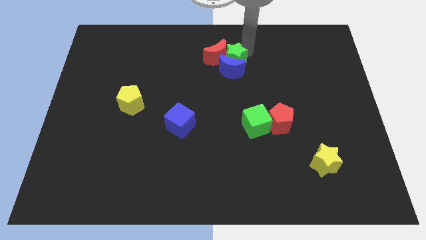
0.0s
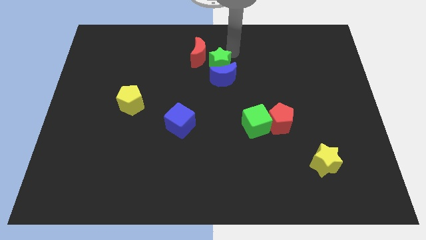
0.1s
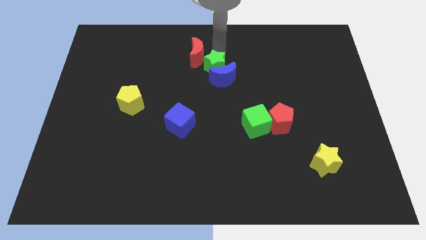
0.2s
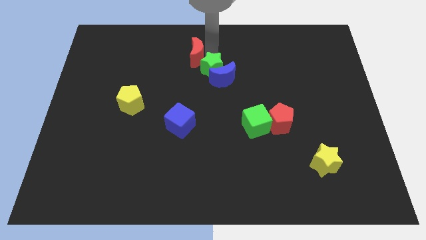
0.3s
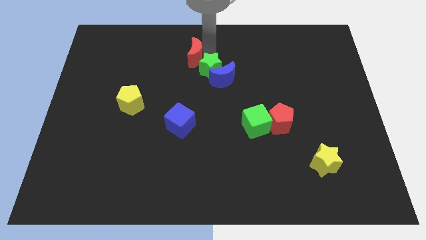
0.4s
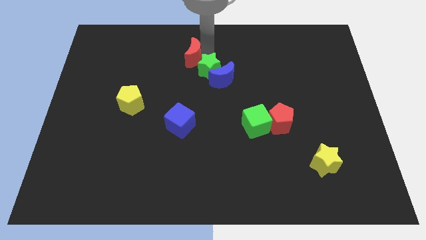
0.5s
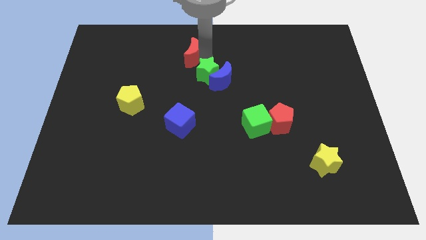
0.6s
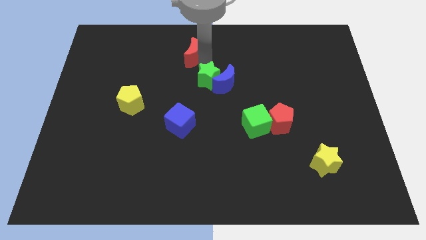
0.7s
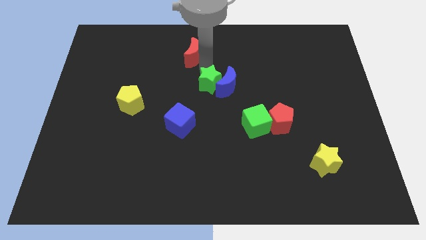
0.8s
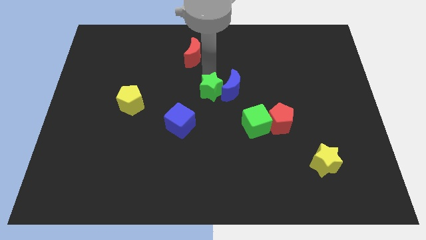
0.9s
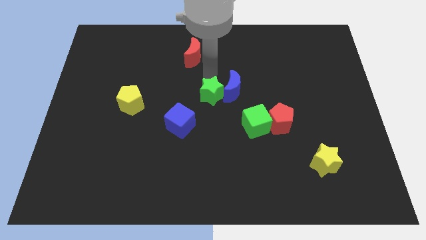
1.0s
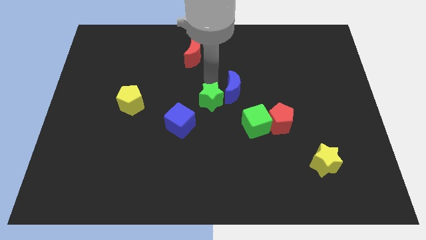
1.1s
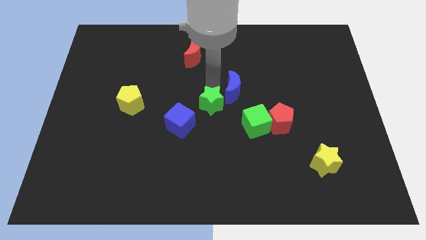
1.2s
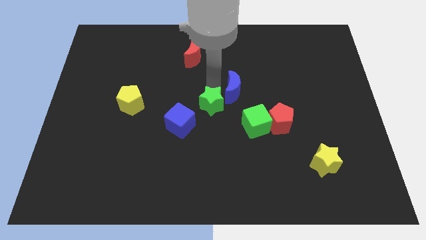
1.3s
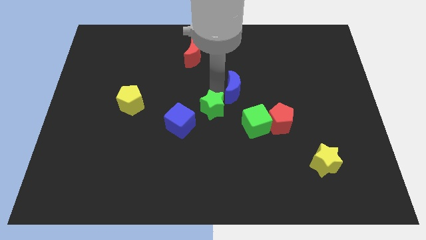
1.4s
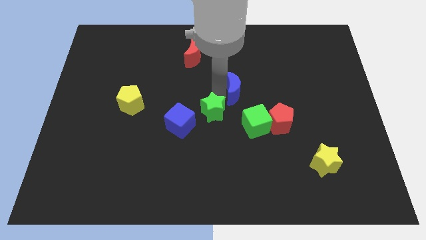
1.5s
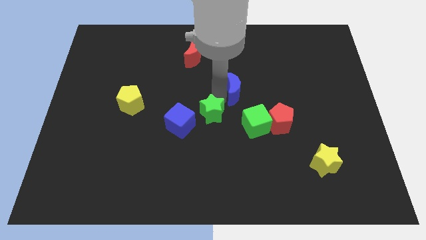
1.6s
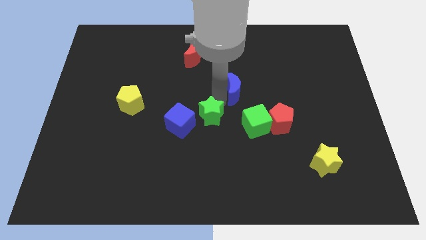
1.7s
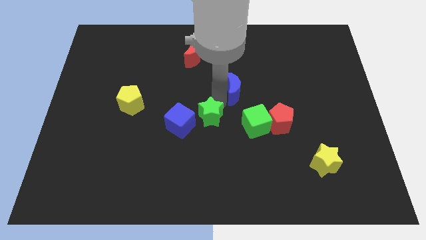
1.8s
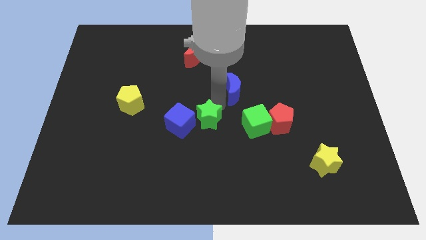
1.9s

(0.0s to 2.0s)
separate the green star with the blue crescent and the red crescent

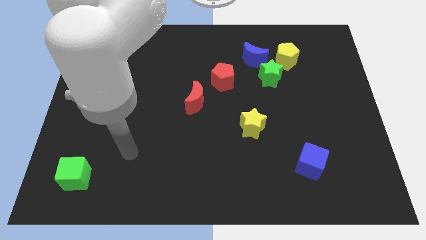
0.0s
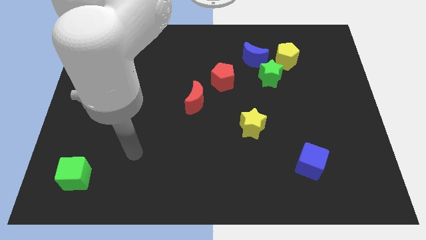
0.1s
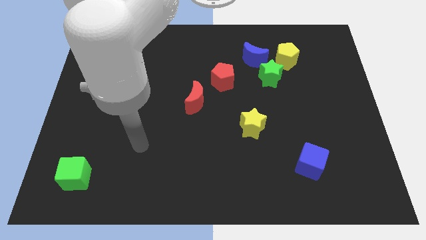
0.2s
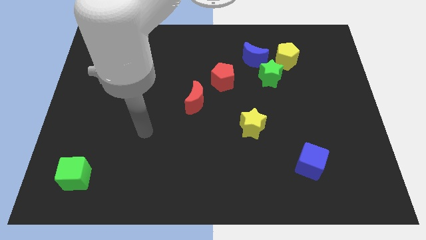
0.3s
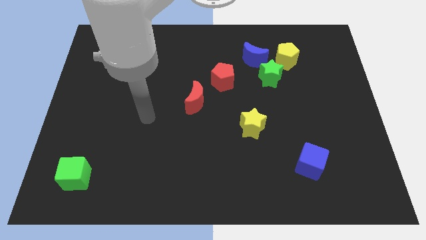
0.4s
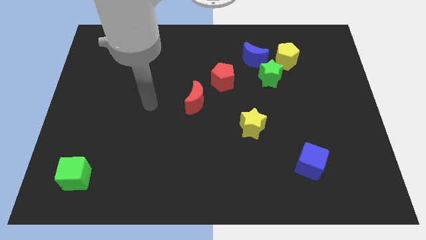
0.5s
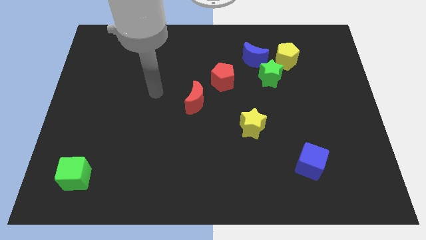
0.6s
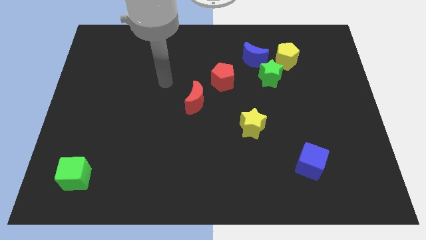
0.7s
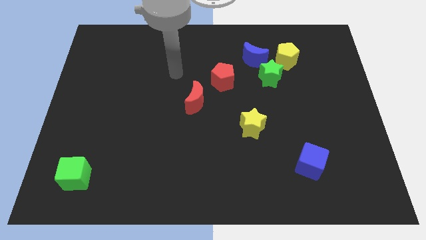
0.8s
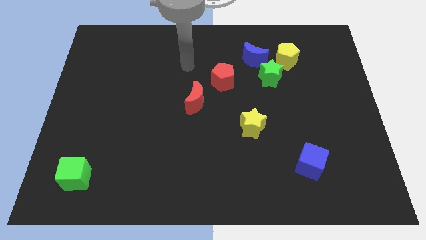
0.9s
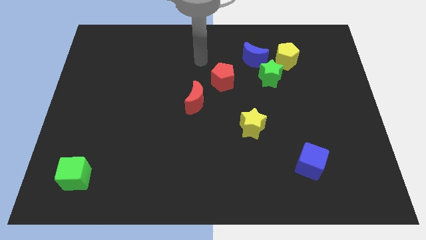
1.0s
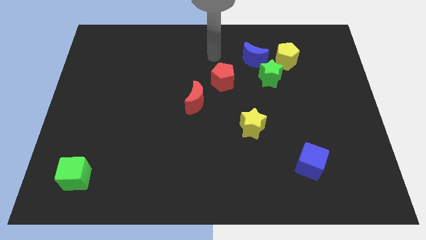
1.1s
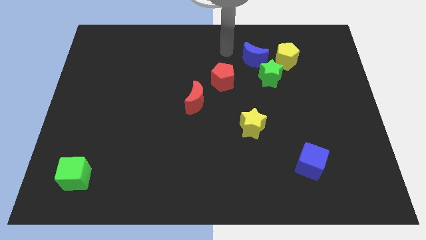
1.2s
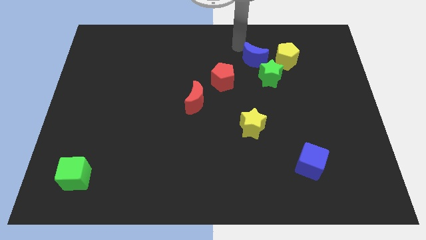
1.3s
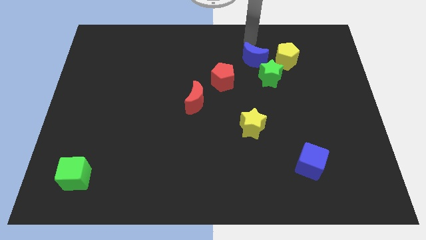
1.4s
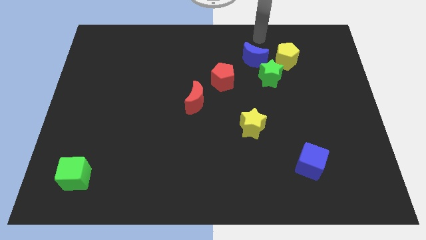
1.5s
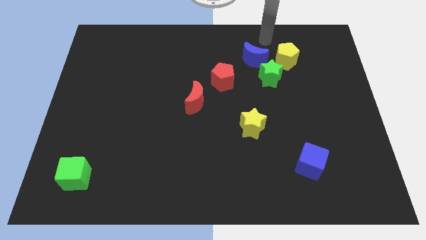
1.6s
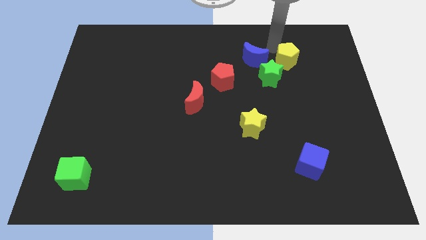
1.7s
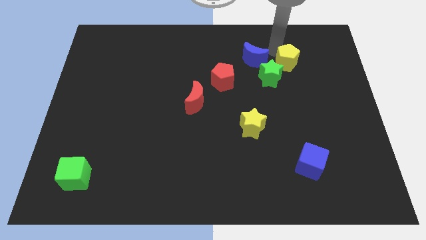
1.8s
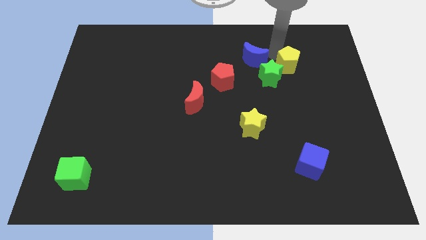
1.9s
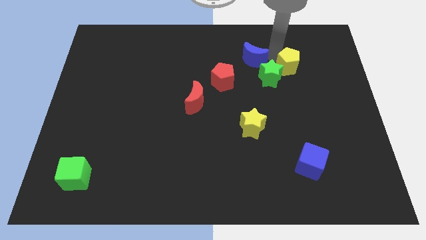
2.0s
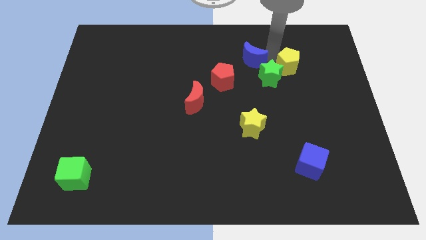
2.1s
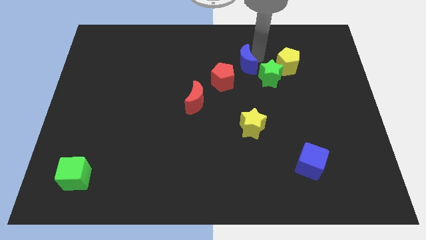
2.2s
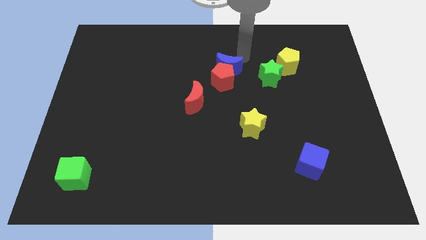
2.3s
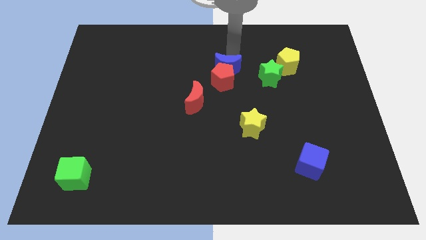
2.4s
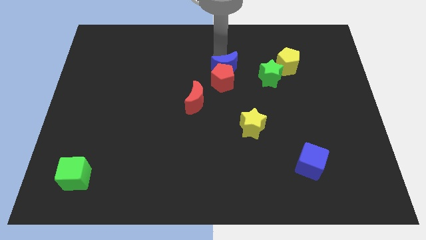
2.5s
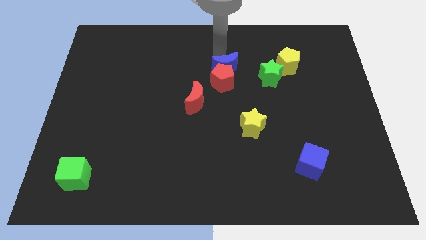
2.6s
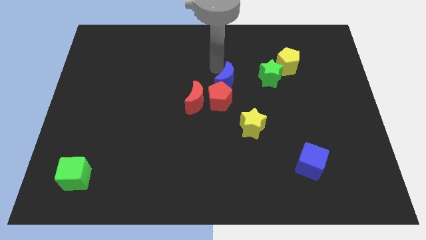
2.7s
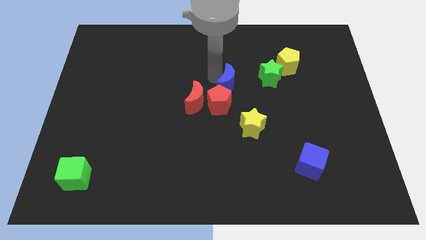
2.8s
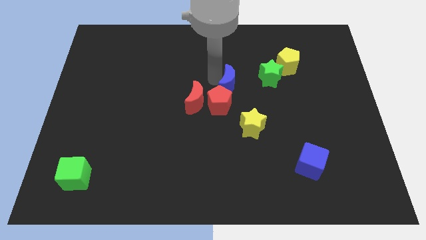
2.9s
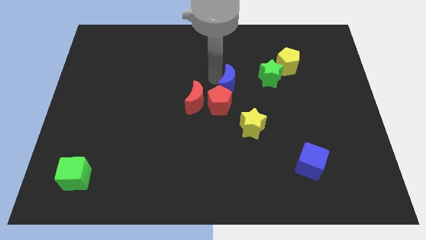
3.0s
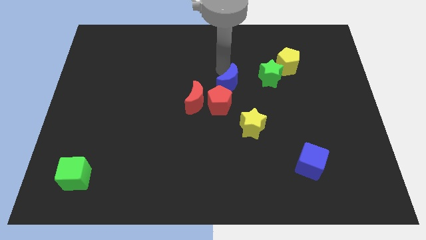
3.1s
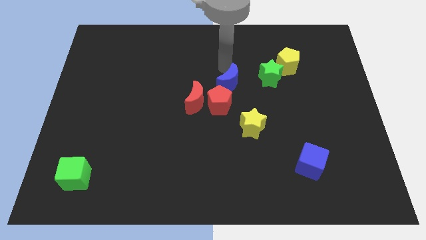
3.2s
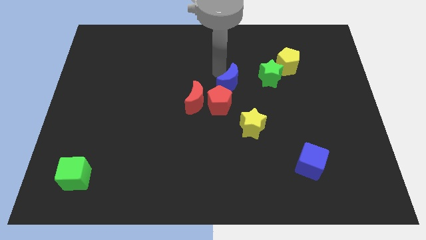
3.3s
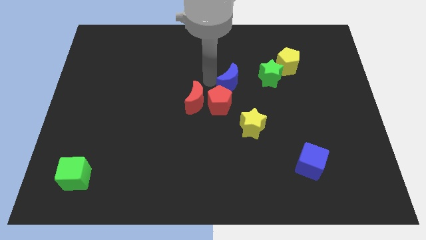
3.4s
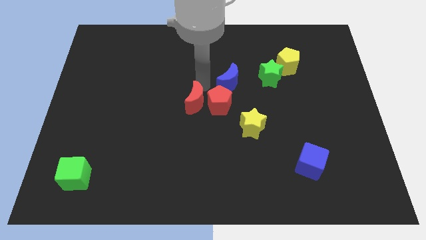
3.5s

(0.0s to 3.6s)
push the red pentagon towards the center using the blue crescent

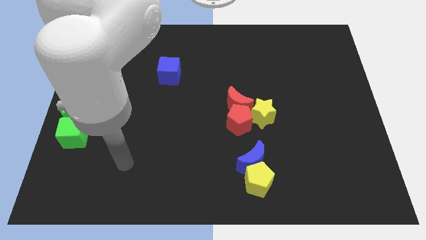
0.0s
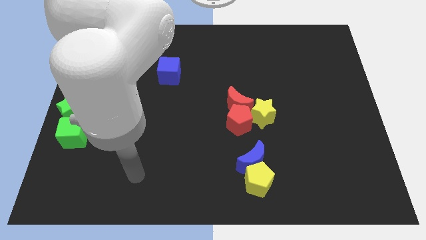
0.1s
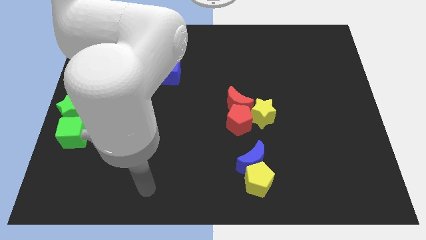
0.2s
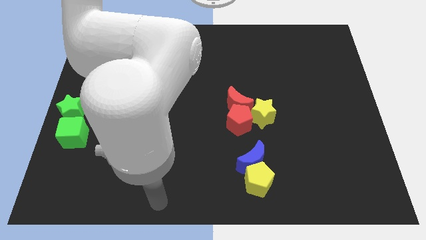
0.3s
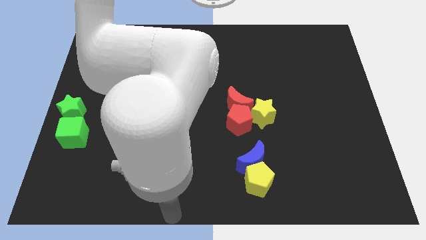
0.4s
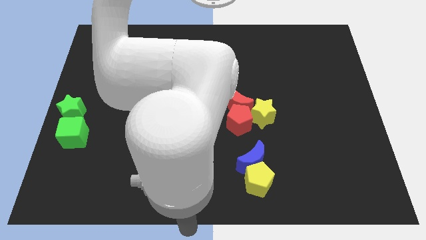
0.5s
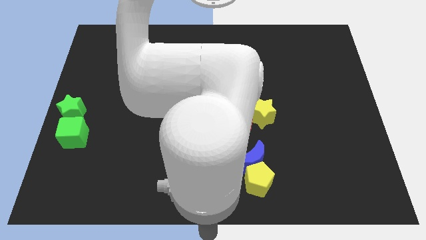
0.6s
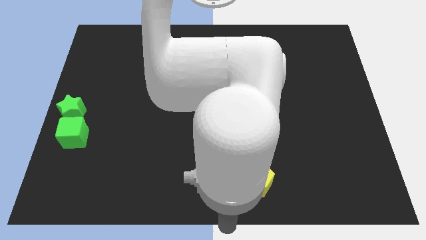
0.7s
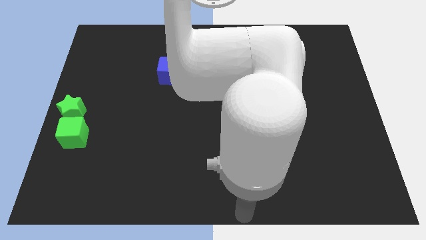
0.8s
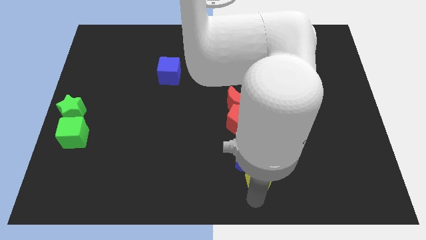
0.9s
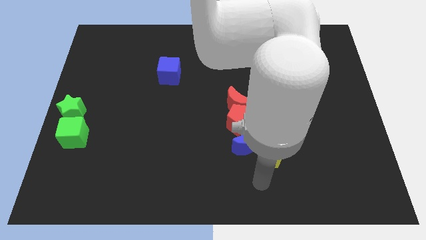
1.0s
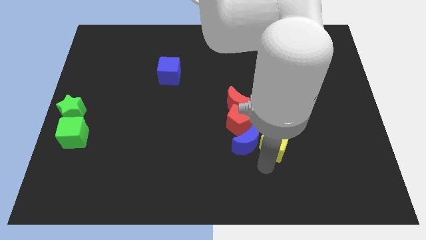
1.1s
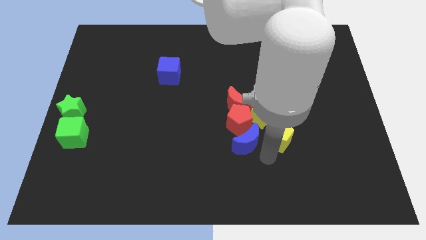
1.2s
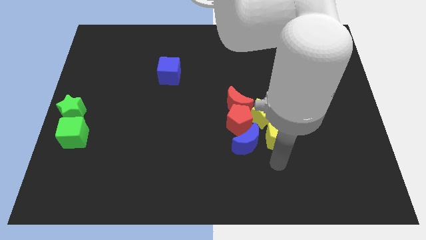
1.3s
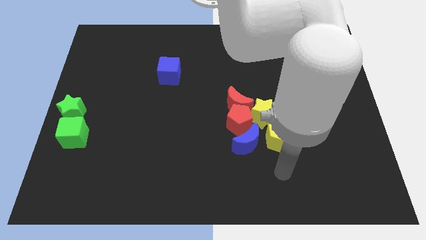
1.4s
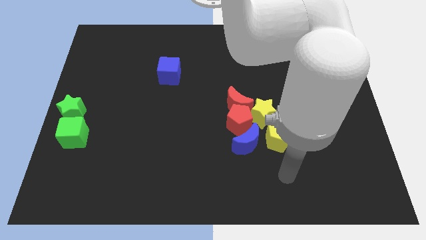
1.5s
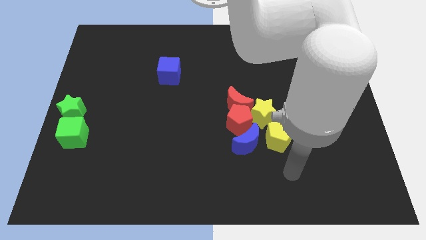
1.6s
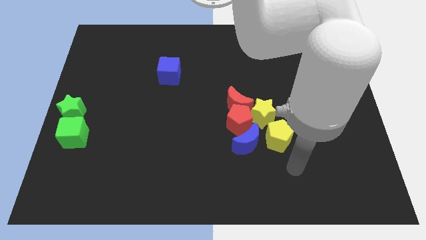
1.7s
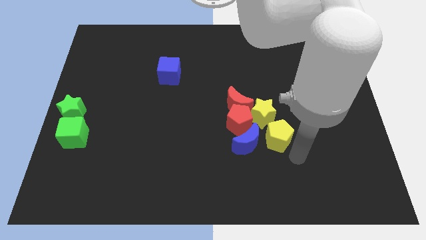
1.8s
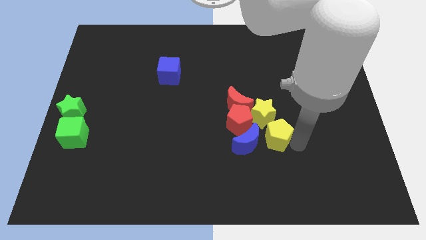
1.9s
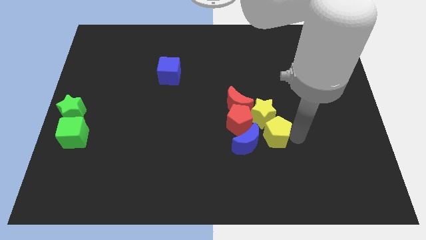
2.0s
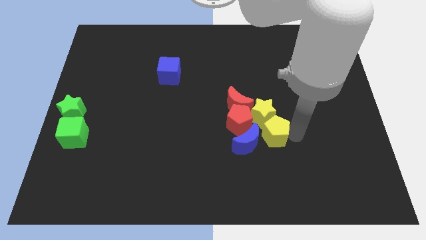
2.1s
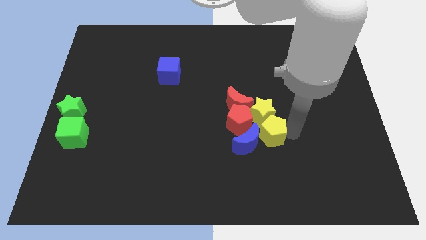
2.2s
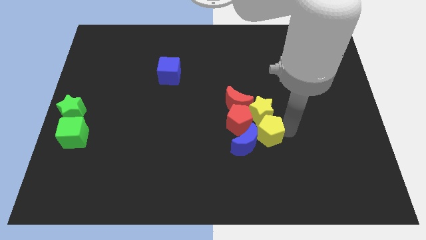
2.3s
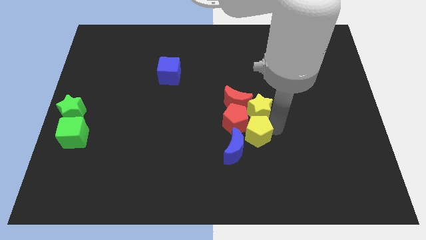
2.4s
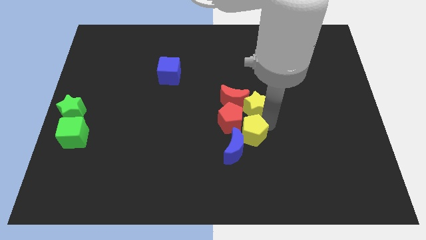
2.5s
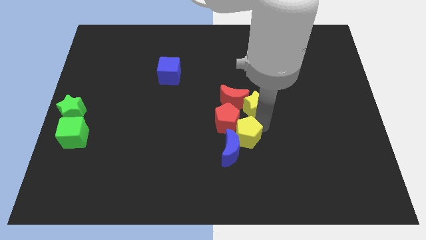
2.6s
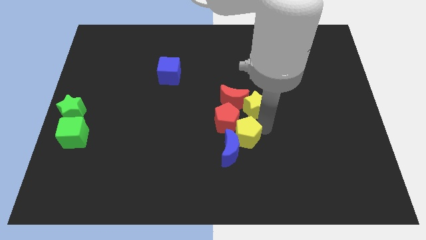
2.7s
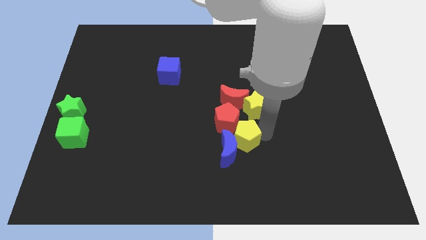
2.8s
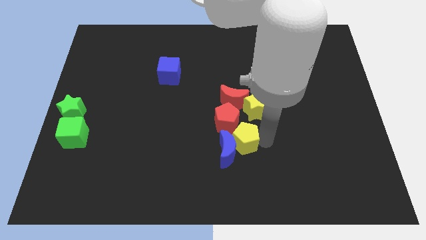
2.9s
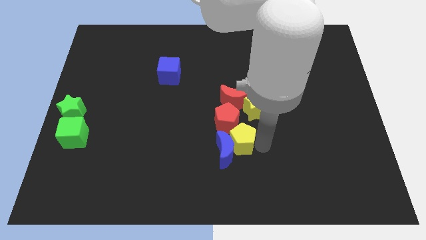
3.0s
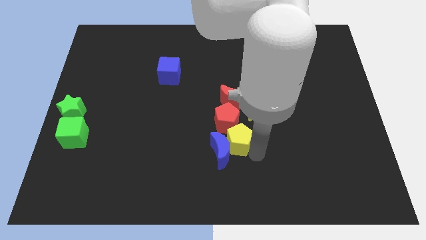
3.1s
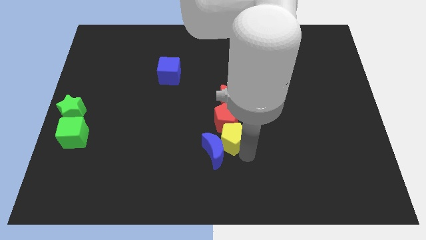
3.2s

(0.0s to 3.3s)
push the yellow pentagon into the group of blocks

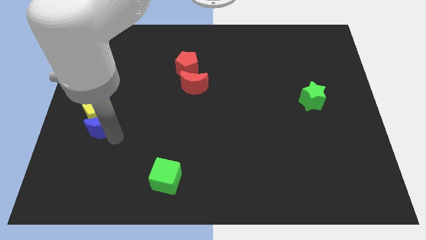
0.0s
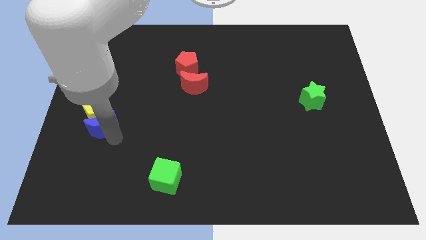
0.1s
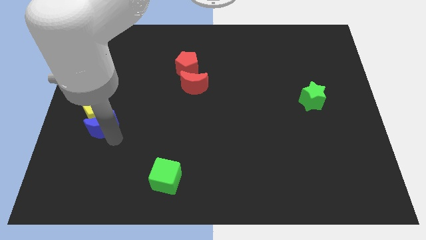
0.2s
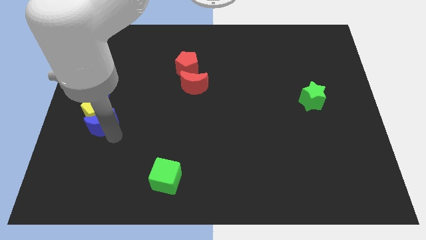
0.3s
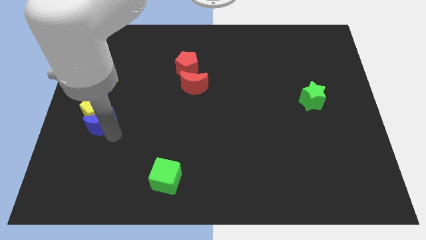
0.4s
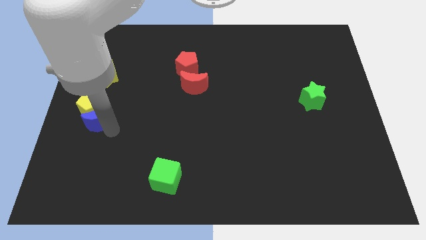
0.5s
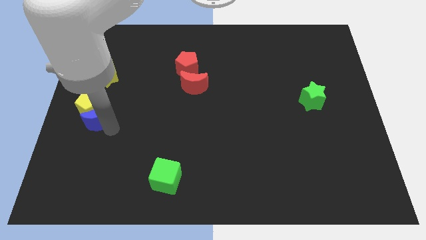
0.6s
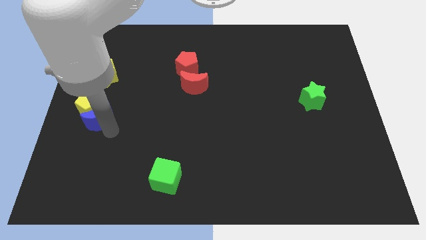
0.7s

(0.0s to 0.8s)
push the blue moon into the yellow pentagon
